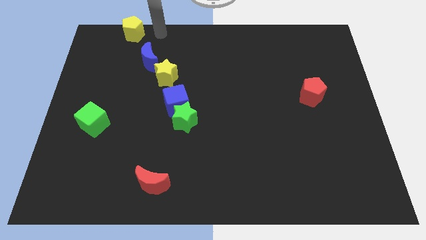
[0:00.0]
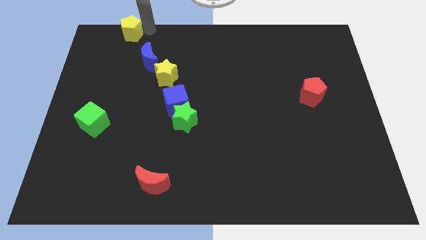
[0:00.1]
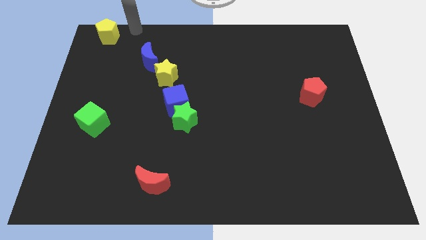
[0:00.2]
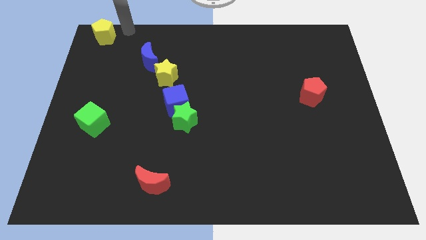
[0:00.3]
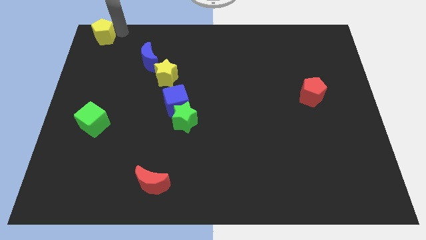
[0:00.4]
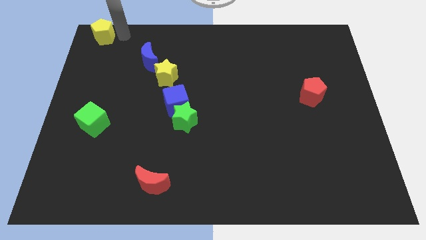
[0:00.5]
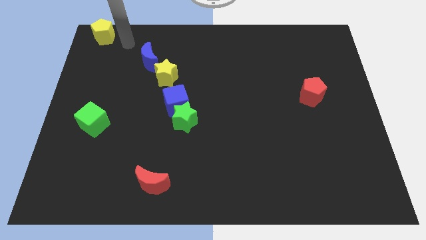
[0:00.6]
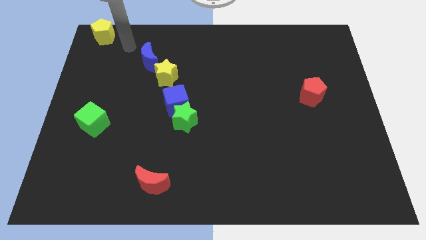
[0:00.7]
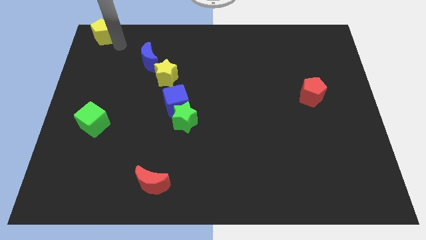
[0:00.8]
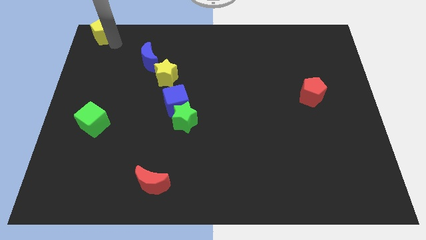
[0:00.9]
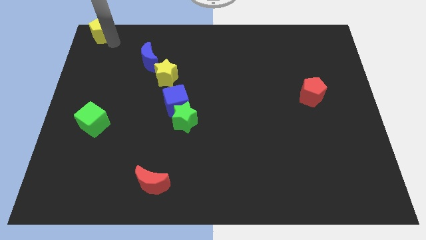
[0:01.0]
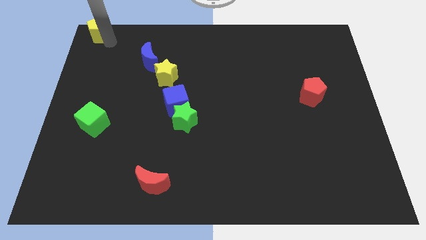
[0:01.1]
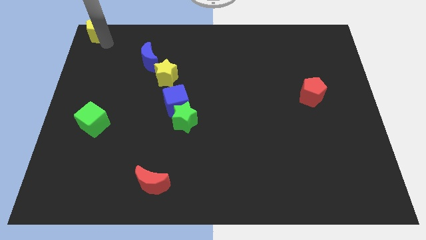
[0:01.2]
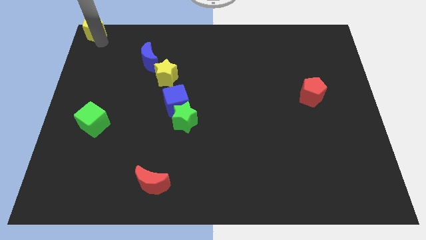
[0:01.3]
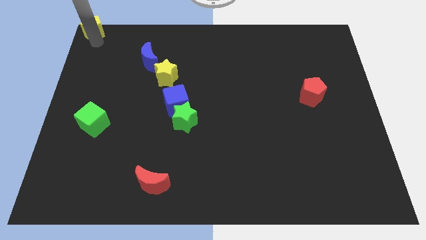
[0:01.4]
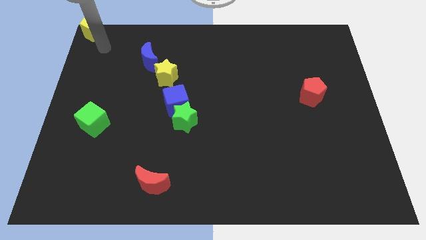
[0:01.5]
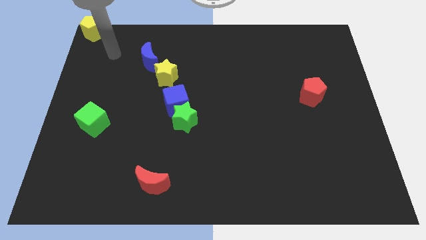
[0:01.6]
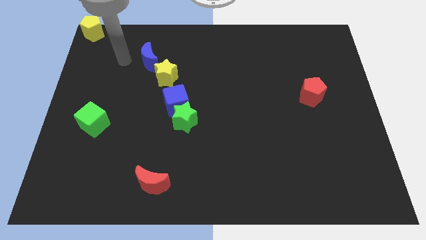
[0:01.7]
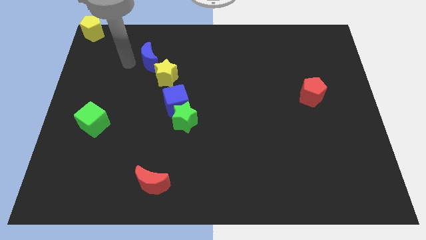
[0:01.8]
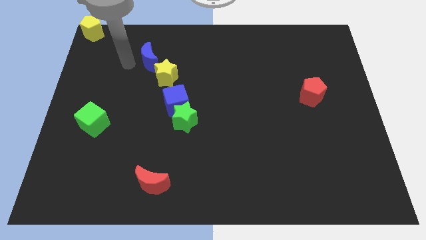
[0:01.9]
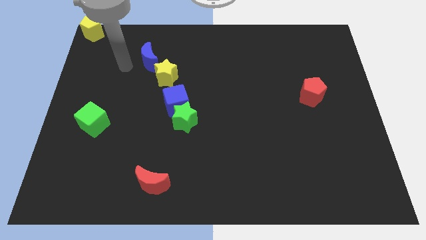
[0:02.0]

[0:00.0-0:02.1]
move yellow pentagon to the top left corner of the board

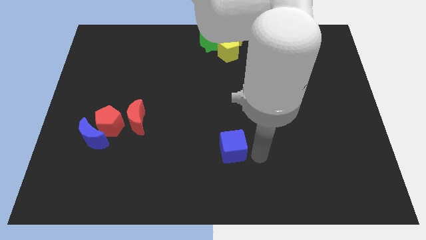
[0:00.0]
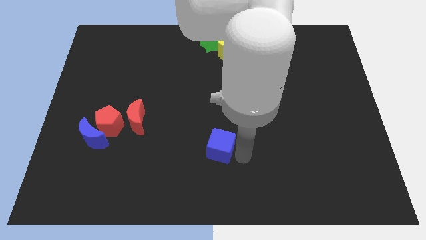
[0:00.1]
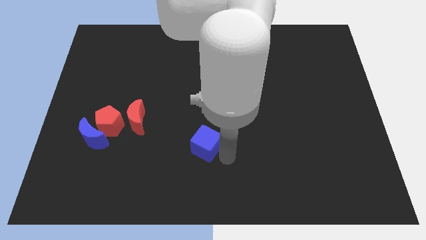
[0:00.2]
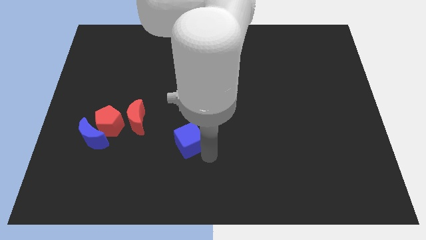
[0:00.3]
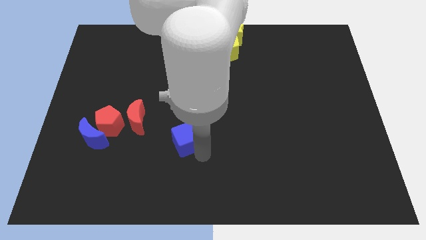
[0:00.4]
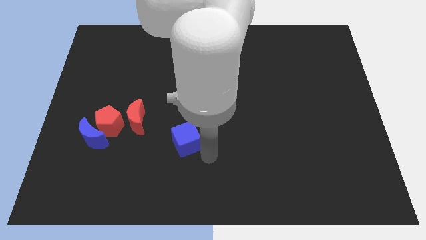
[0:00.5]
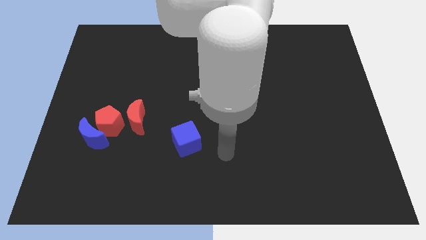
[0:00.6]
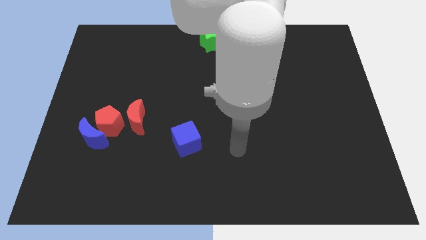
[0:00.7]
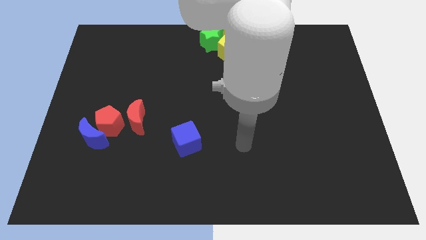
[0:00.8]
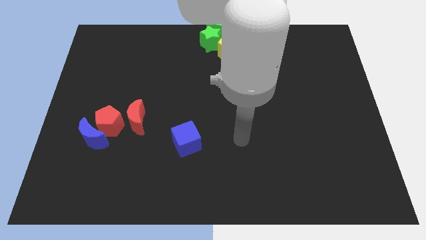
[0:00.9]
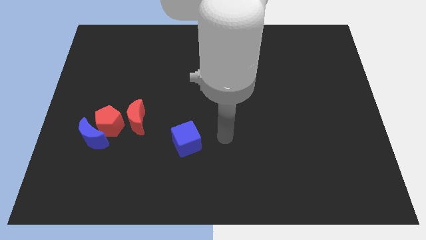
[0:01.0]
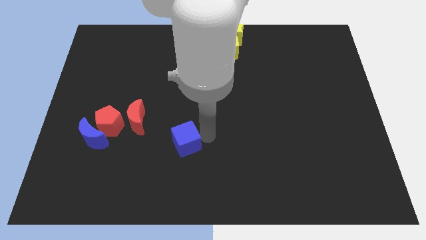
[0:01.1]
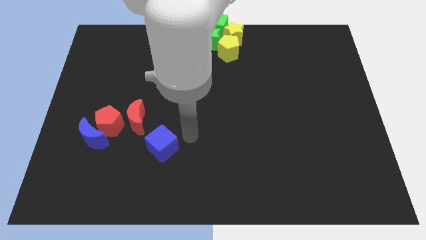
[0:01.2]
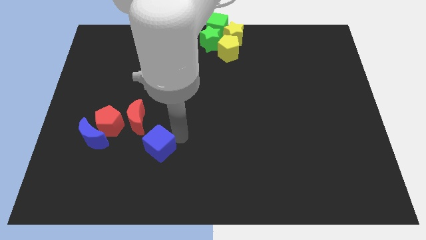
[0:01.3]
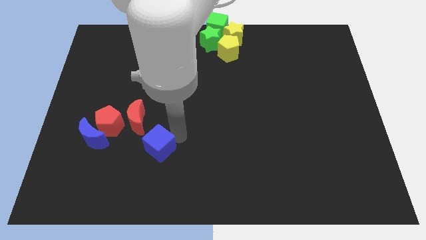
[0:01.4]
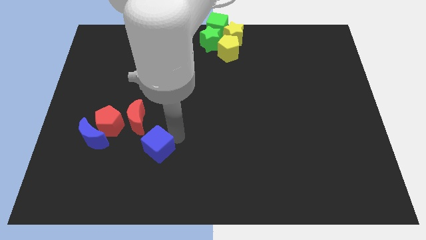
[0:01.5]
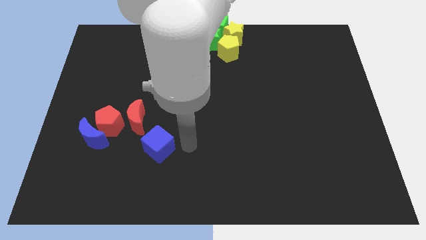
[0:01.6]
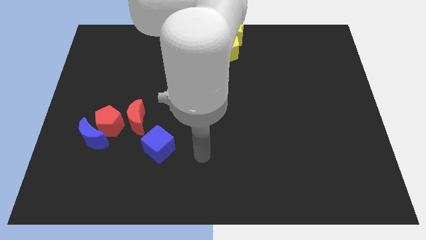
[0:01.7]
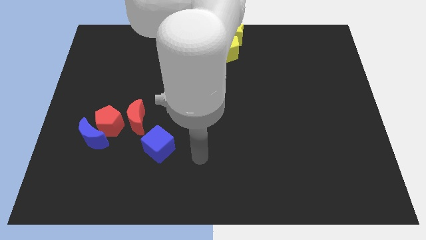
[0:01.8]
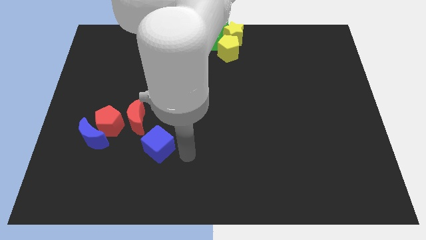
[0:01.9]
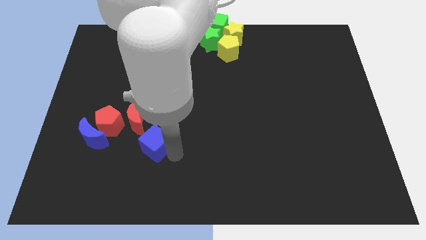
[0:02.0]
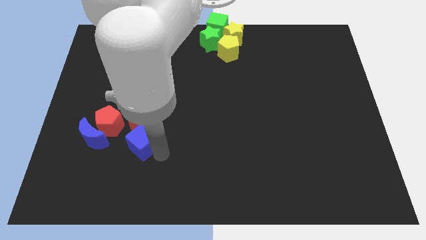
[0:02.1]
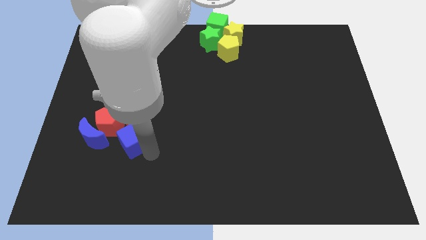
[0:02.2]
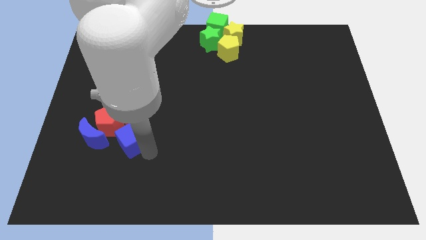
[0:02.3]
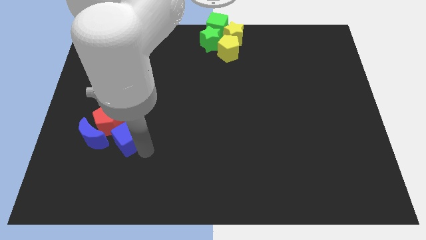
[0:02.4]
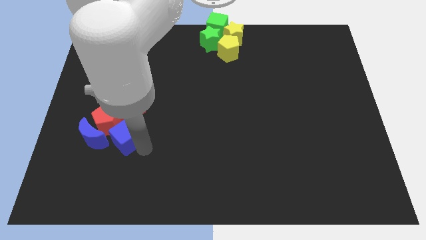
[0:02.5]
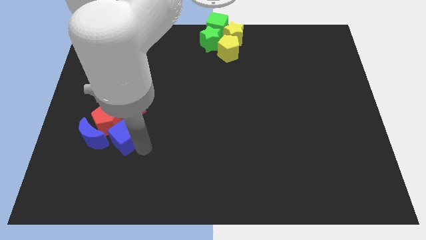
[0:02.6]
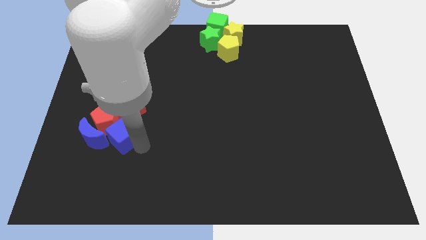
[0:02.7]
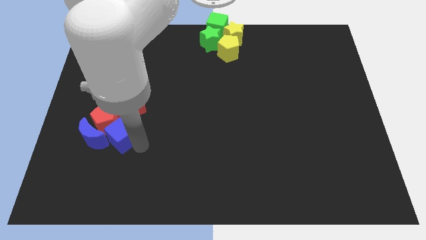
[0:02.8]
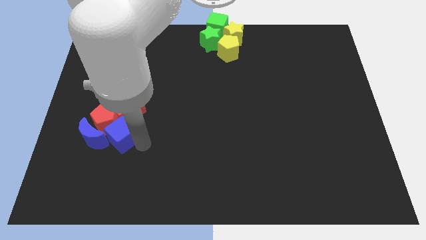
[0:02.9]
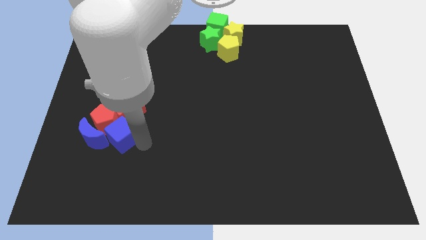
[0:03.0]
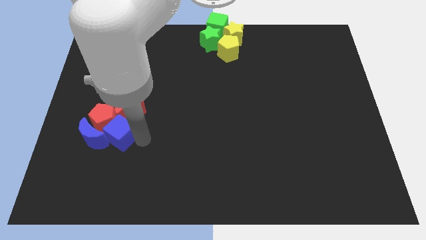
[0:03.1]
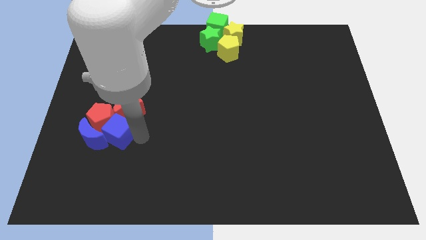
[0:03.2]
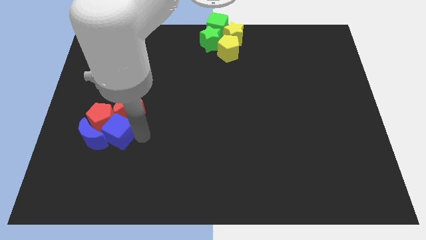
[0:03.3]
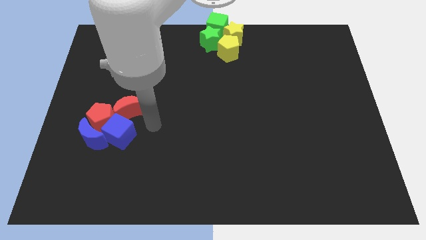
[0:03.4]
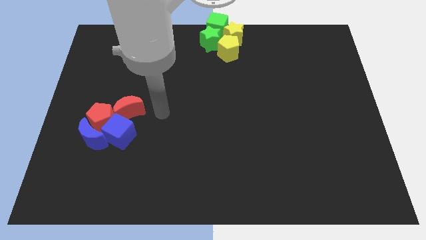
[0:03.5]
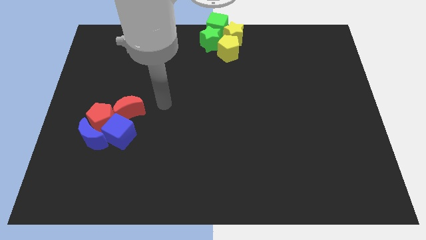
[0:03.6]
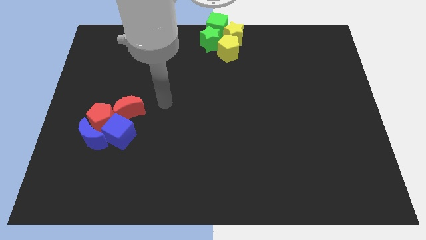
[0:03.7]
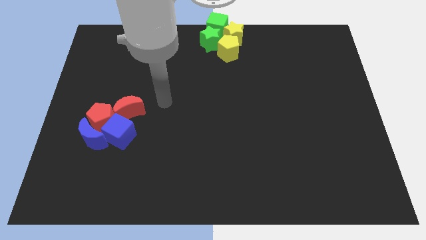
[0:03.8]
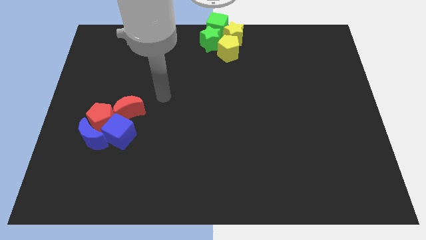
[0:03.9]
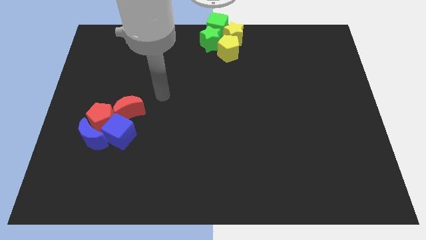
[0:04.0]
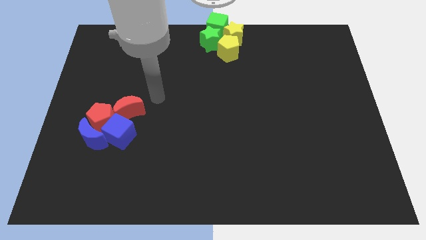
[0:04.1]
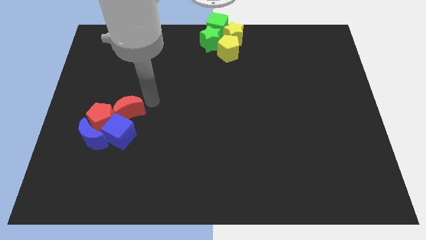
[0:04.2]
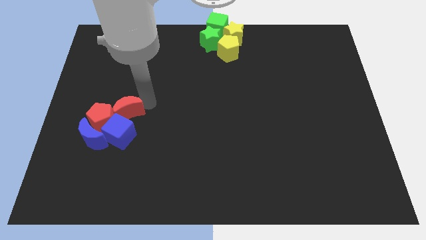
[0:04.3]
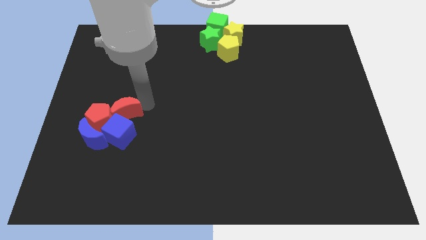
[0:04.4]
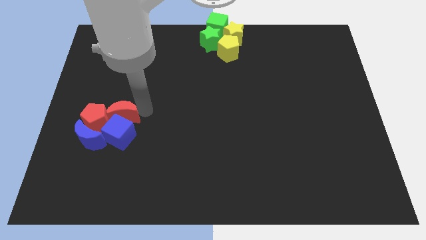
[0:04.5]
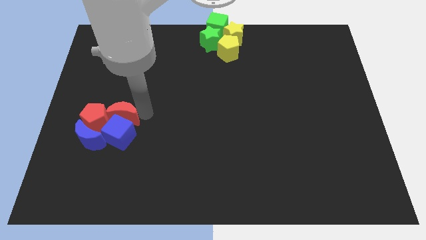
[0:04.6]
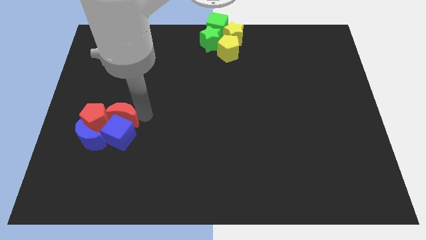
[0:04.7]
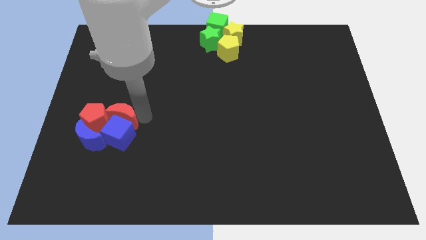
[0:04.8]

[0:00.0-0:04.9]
push the blue cube into the red pentagon and blue crescent

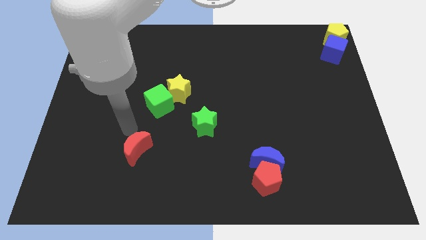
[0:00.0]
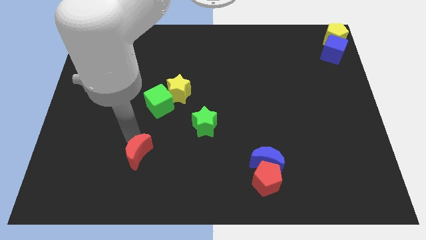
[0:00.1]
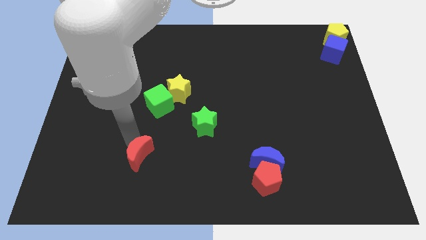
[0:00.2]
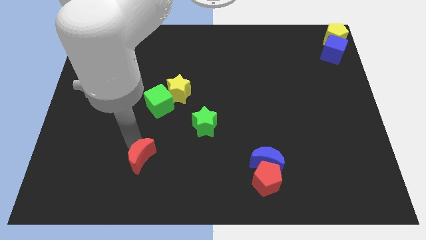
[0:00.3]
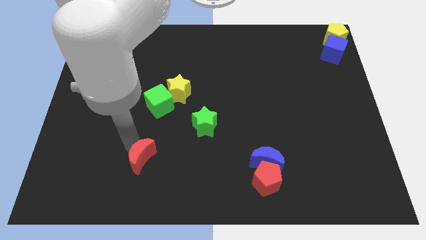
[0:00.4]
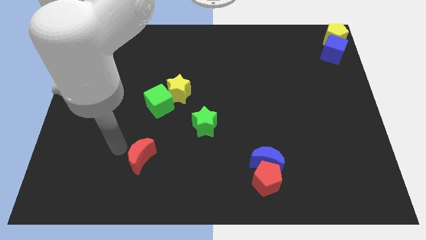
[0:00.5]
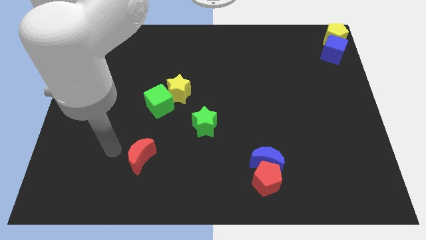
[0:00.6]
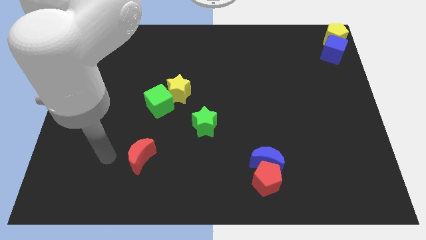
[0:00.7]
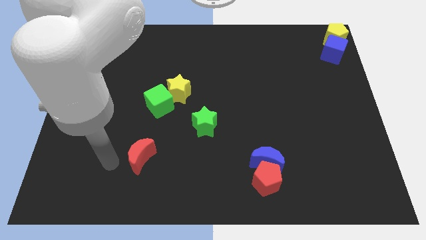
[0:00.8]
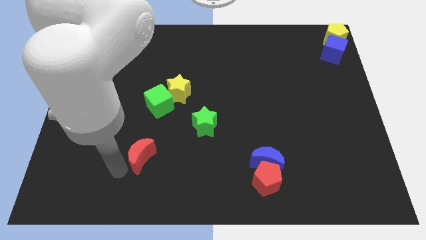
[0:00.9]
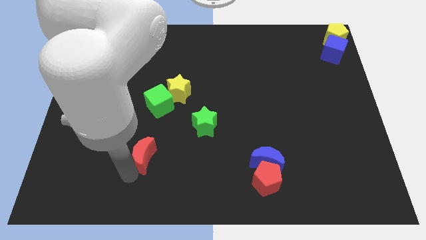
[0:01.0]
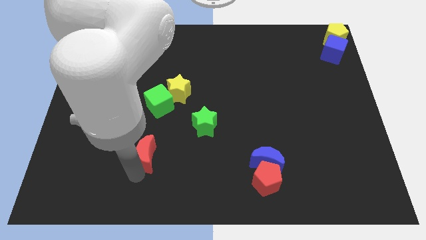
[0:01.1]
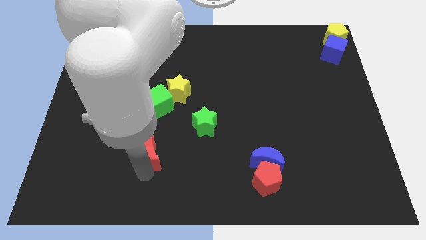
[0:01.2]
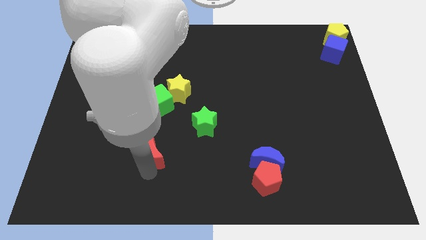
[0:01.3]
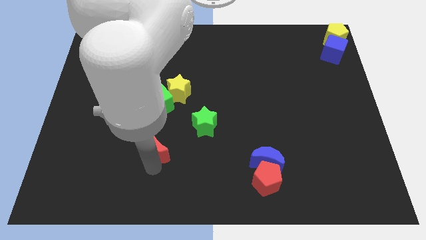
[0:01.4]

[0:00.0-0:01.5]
push the red crescent towards the bottom center of the board

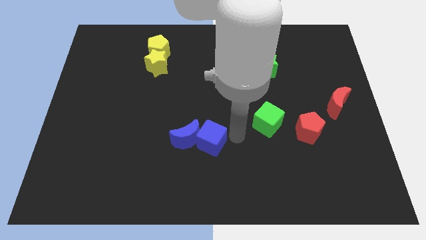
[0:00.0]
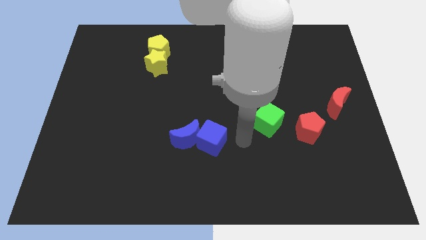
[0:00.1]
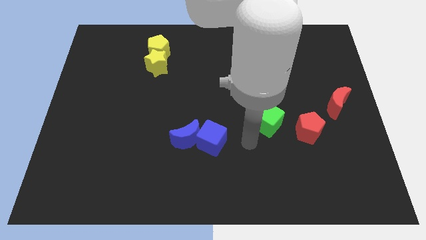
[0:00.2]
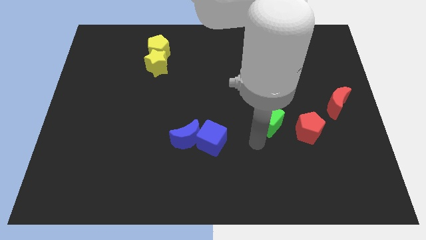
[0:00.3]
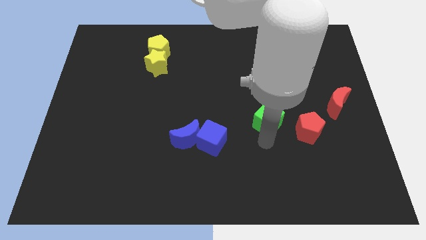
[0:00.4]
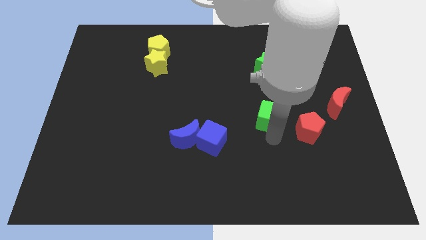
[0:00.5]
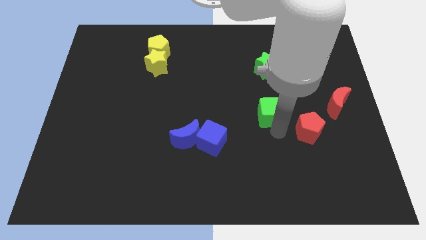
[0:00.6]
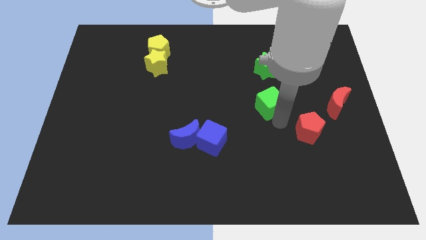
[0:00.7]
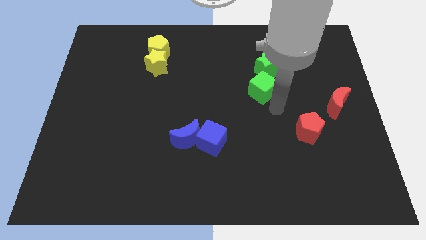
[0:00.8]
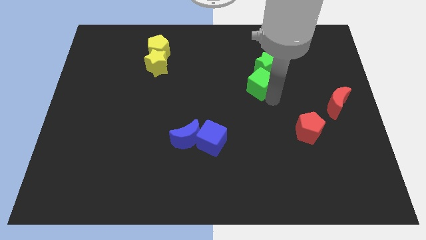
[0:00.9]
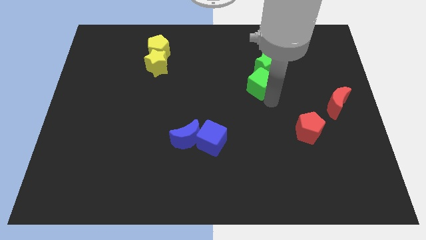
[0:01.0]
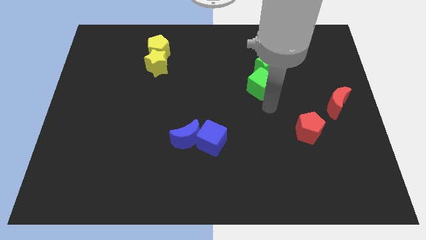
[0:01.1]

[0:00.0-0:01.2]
push the green cube close to the green star
